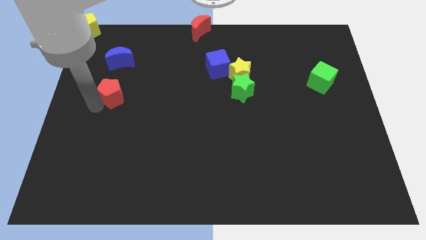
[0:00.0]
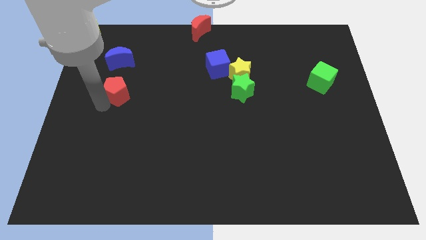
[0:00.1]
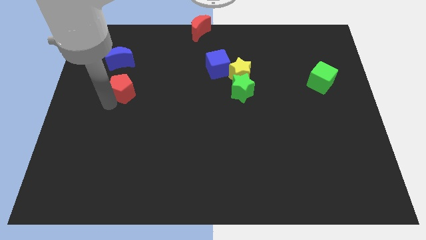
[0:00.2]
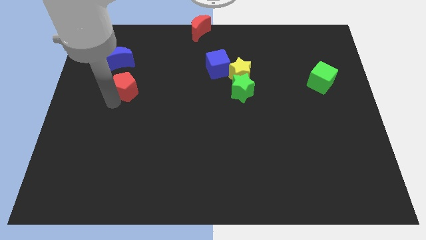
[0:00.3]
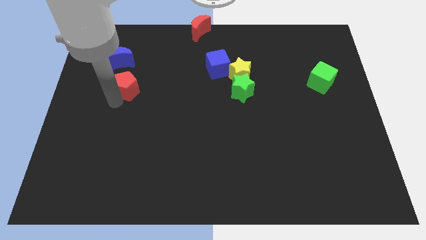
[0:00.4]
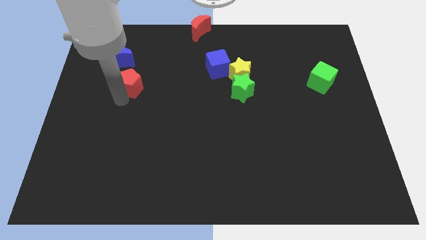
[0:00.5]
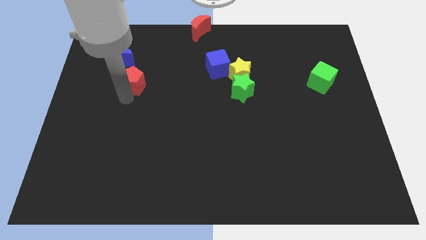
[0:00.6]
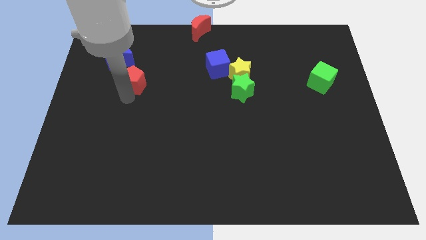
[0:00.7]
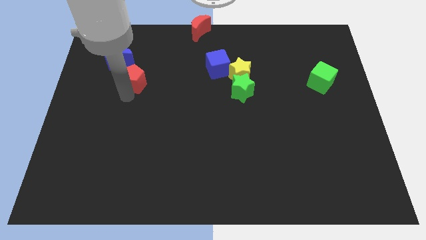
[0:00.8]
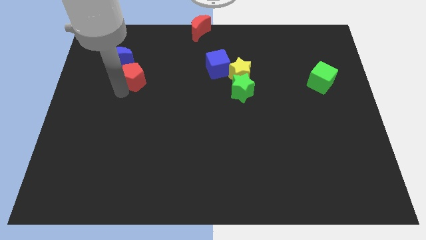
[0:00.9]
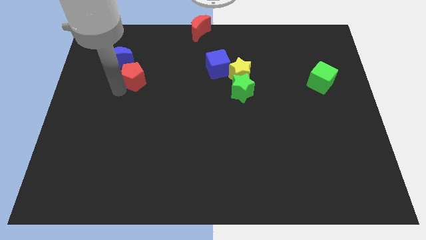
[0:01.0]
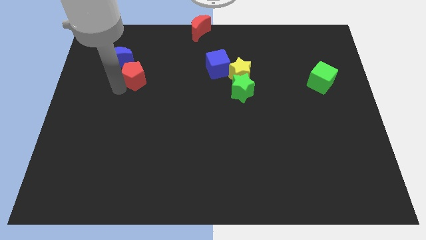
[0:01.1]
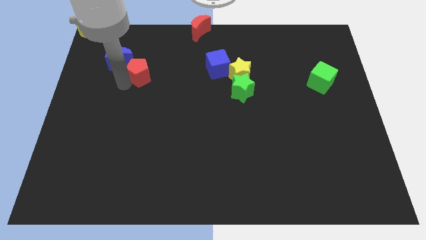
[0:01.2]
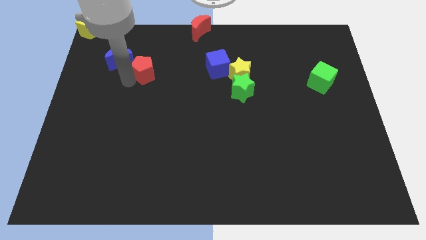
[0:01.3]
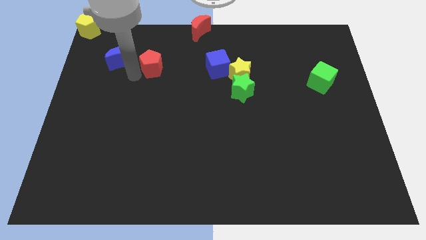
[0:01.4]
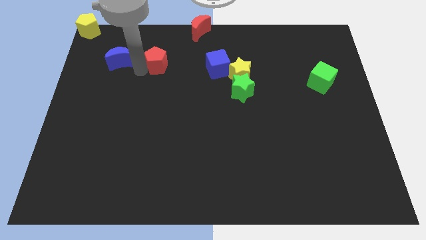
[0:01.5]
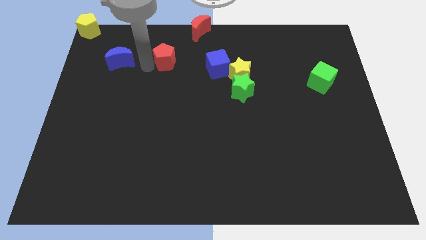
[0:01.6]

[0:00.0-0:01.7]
place red pentagon to the right of blue moon

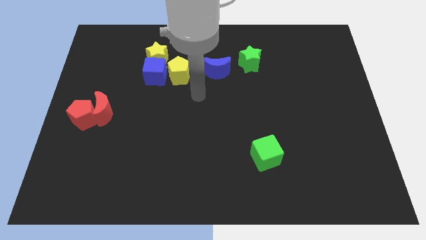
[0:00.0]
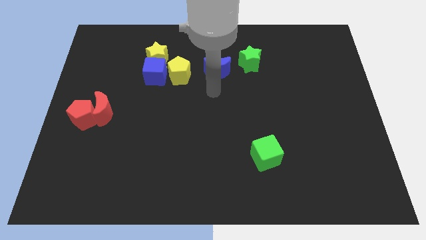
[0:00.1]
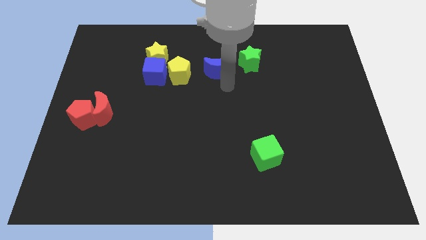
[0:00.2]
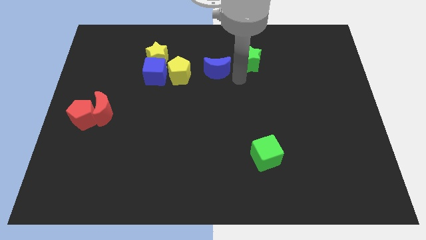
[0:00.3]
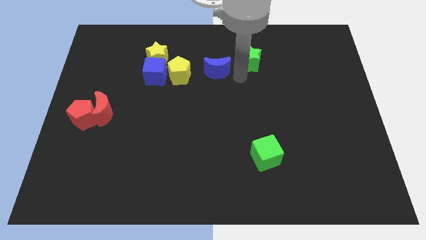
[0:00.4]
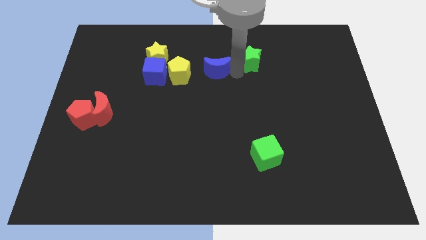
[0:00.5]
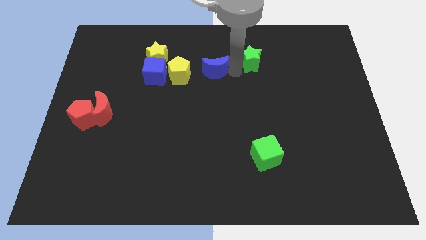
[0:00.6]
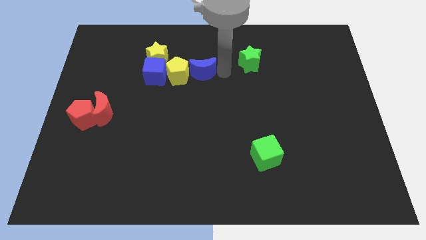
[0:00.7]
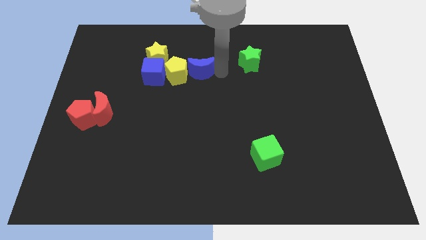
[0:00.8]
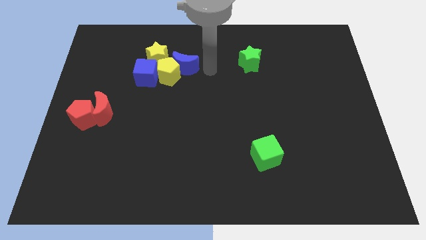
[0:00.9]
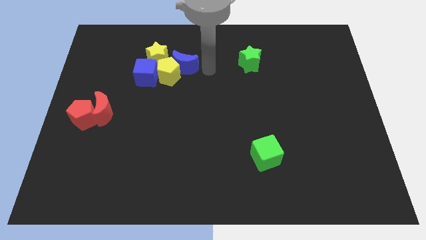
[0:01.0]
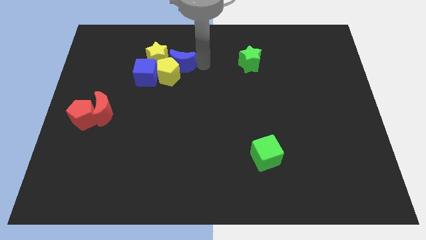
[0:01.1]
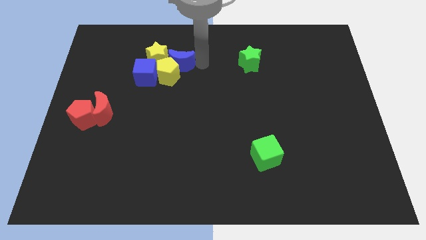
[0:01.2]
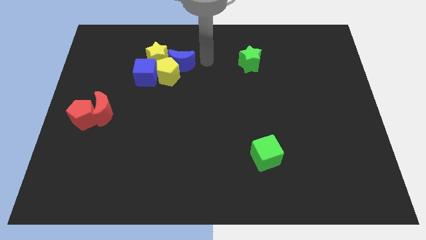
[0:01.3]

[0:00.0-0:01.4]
push the blue crescent into the top of the yellow pentagon

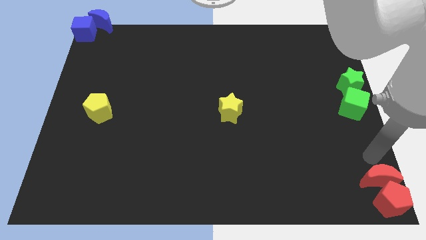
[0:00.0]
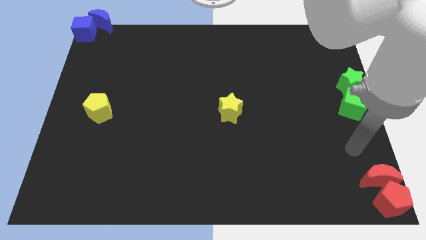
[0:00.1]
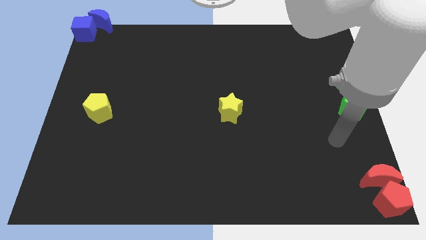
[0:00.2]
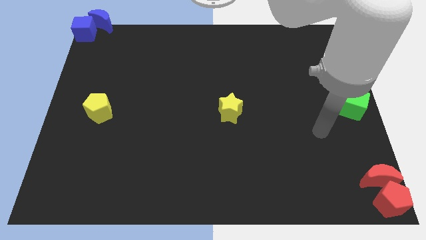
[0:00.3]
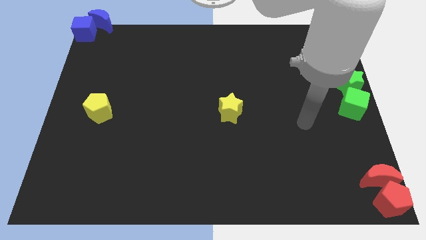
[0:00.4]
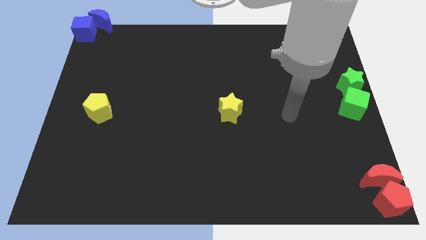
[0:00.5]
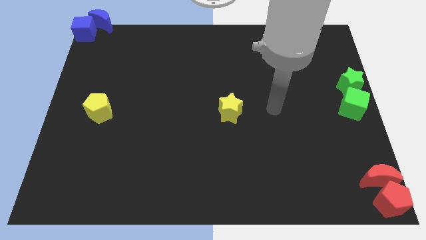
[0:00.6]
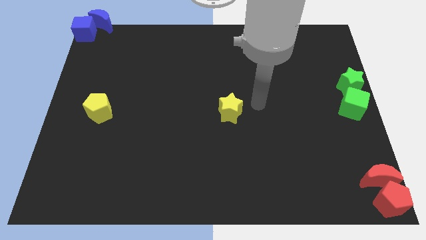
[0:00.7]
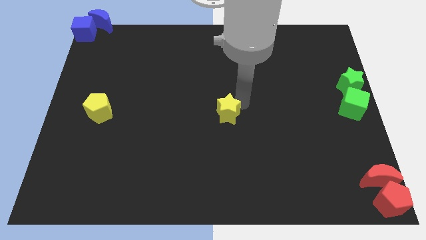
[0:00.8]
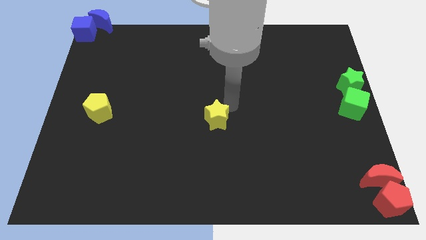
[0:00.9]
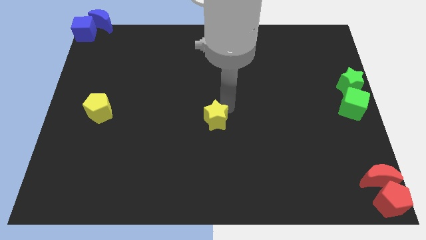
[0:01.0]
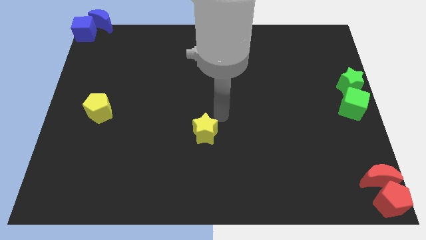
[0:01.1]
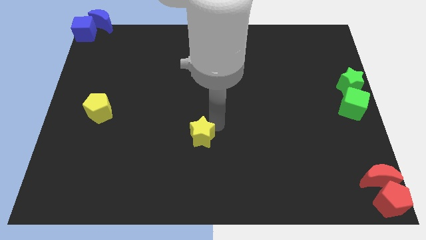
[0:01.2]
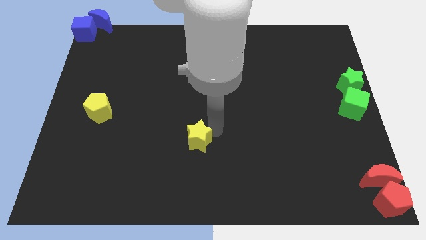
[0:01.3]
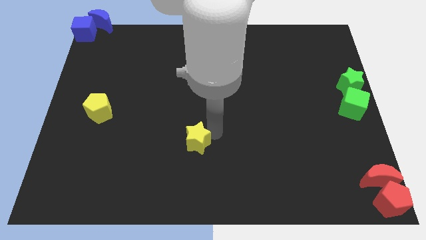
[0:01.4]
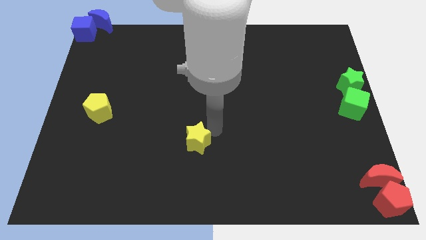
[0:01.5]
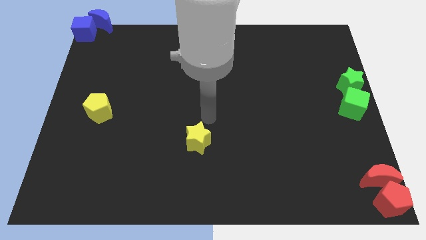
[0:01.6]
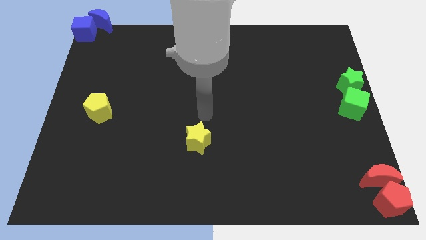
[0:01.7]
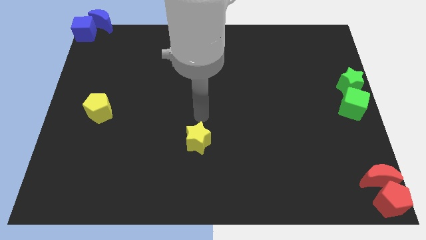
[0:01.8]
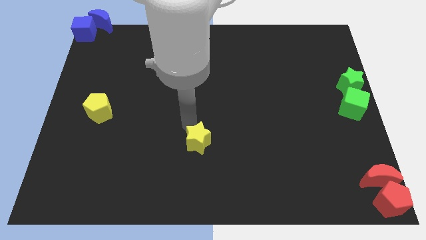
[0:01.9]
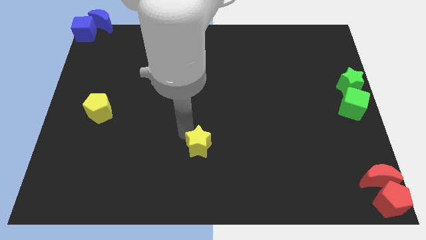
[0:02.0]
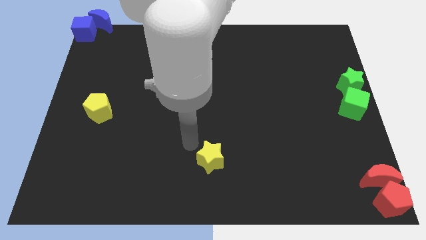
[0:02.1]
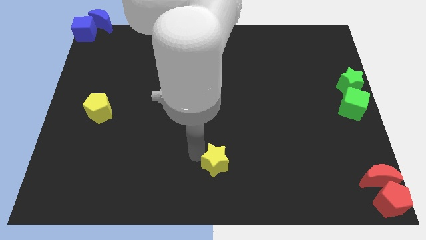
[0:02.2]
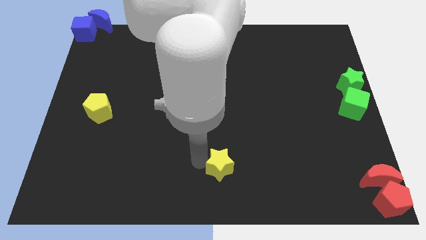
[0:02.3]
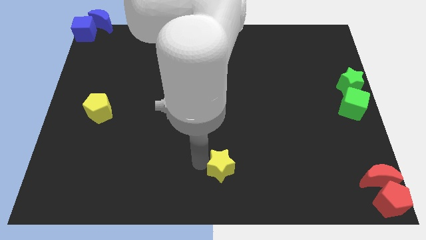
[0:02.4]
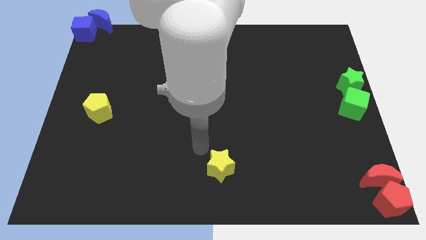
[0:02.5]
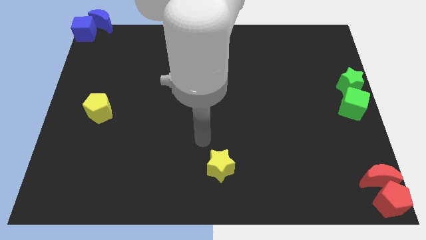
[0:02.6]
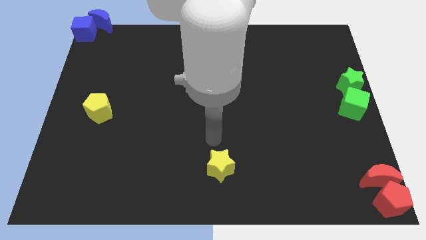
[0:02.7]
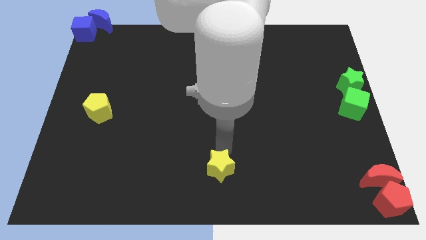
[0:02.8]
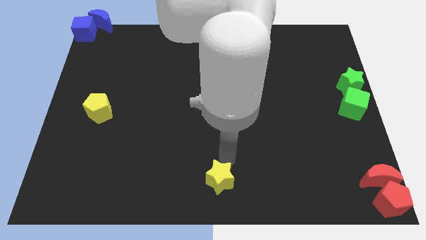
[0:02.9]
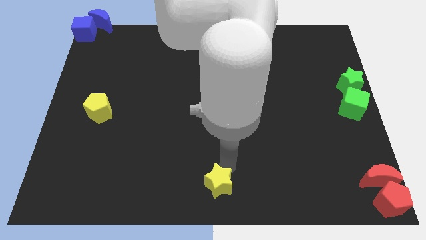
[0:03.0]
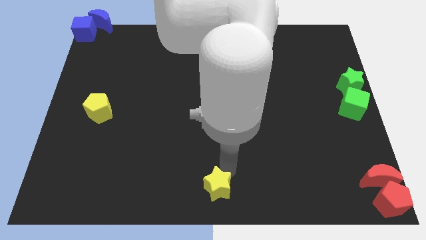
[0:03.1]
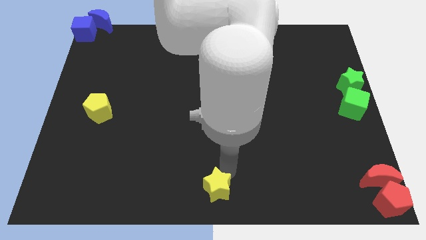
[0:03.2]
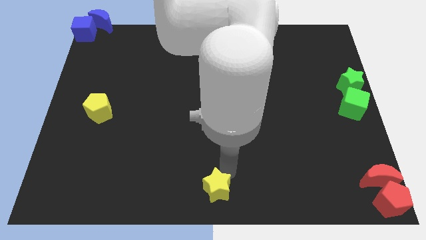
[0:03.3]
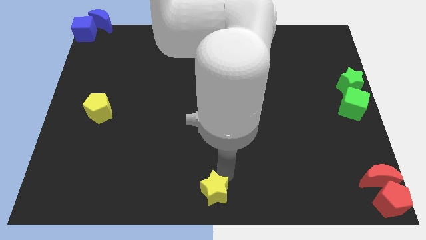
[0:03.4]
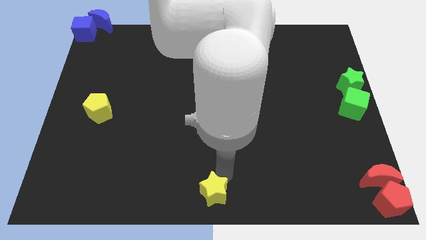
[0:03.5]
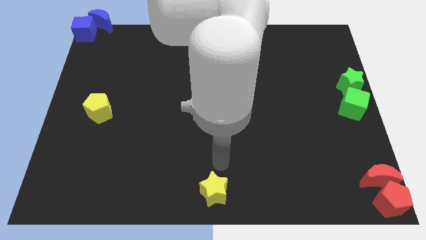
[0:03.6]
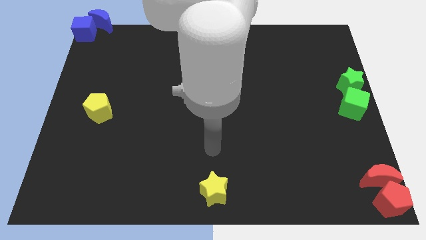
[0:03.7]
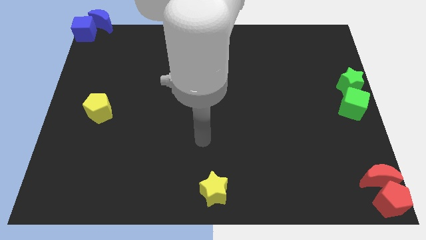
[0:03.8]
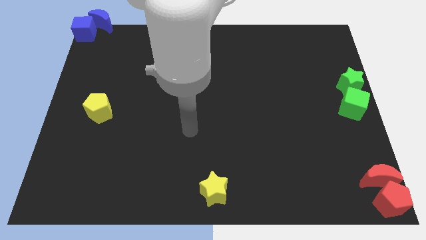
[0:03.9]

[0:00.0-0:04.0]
put the yellow star at the bottom center of the board

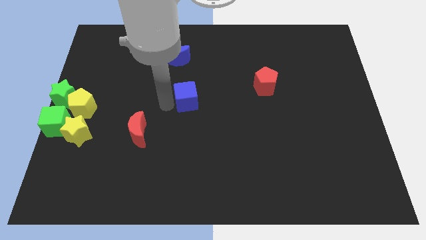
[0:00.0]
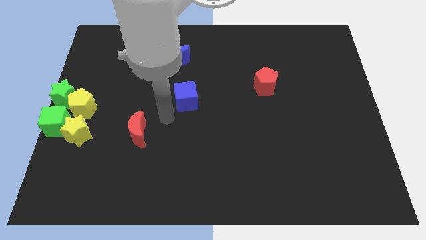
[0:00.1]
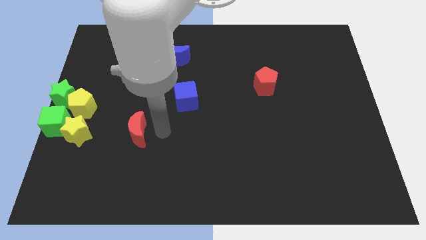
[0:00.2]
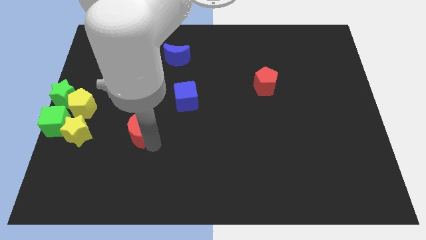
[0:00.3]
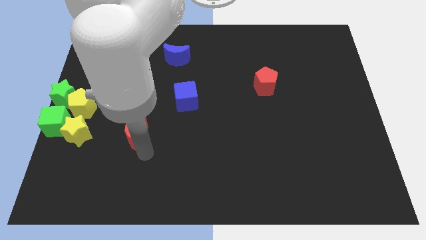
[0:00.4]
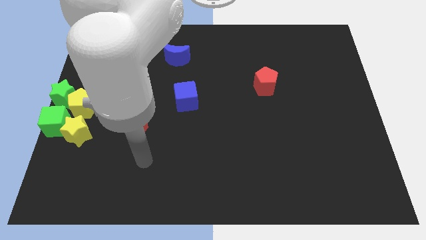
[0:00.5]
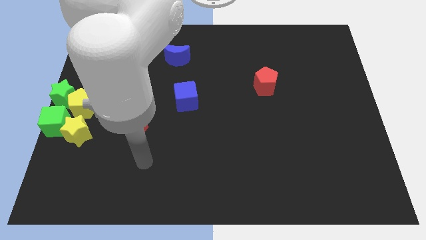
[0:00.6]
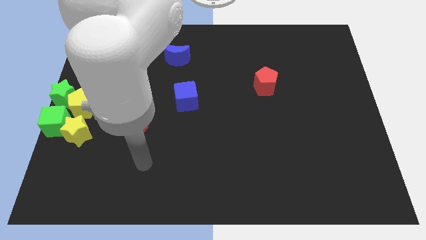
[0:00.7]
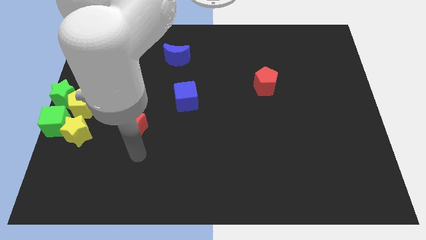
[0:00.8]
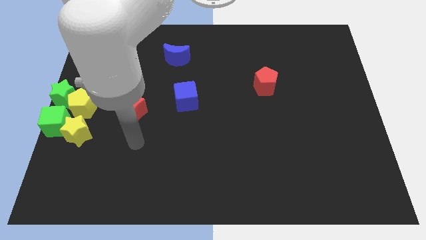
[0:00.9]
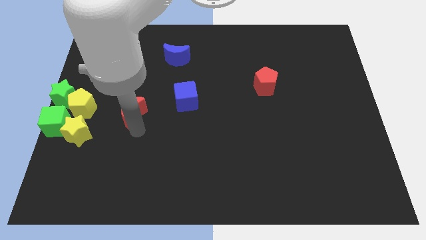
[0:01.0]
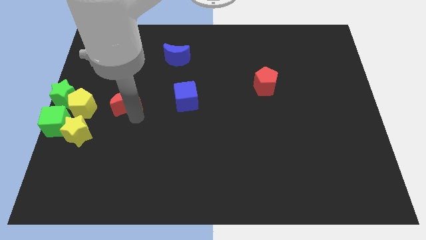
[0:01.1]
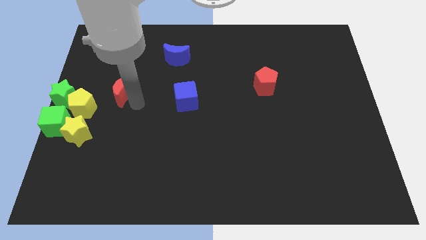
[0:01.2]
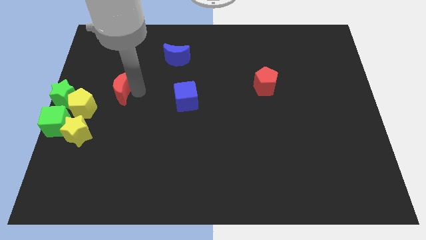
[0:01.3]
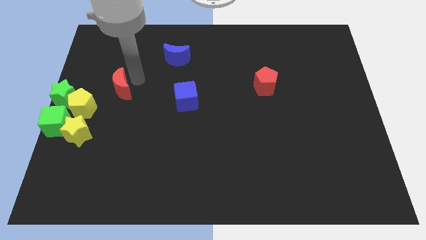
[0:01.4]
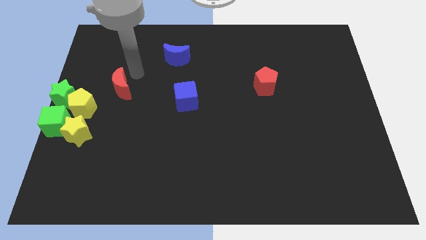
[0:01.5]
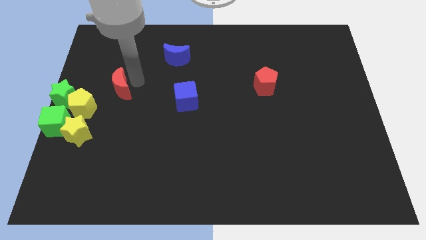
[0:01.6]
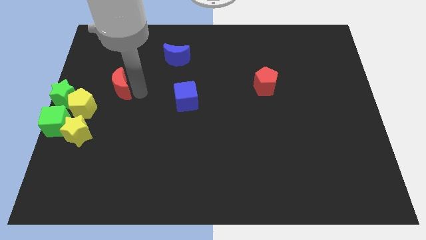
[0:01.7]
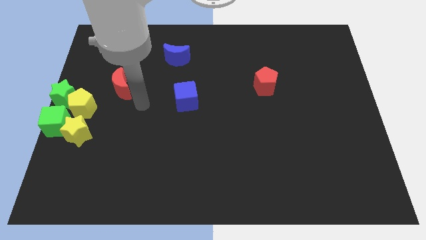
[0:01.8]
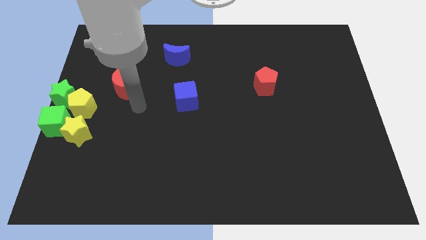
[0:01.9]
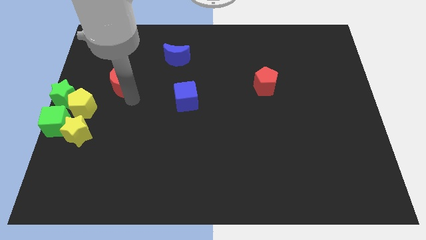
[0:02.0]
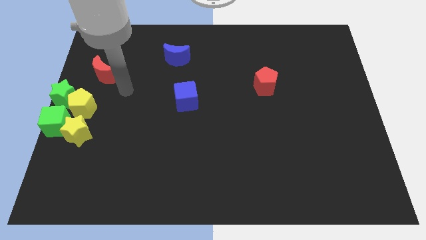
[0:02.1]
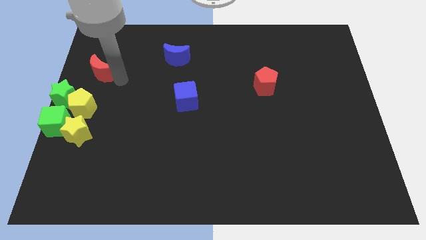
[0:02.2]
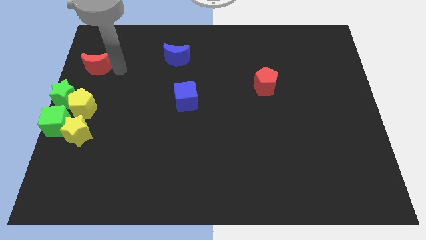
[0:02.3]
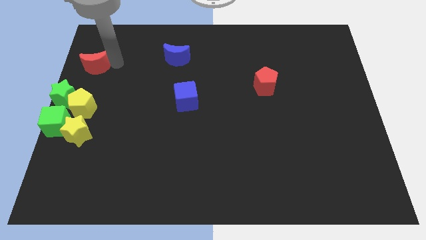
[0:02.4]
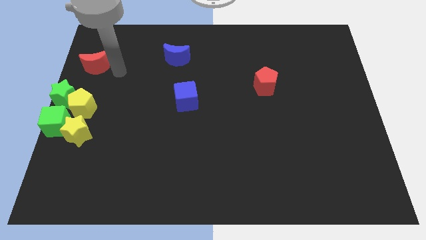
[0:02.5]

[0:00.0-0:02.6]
push the red crescent to the top of the yellow pentagon
